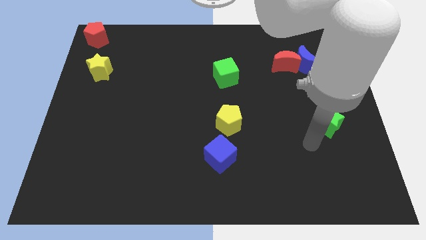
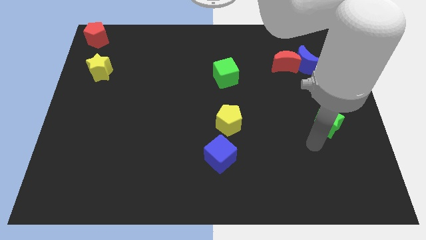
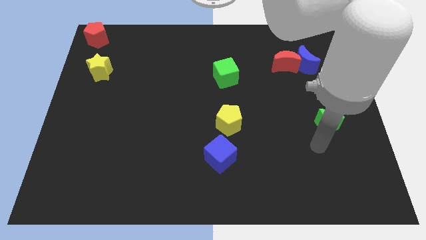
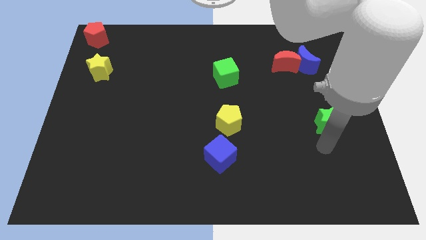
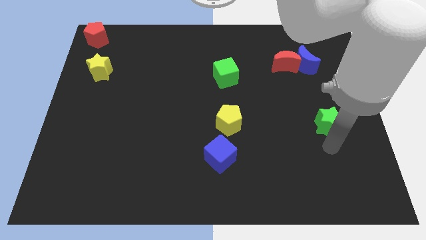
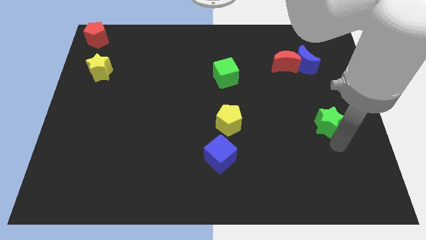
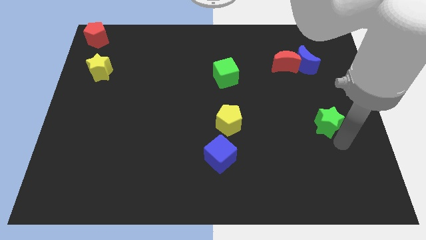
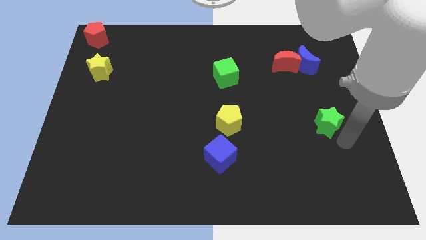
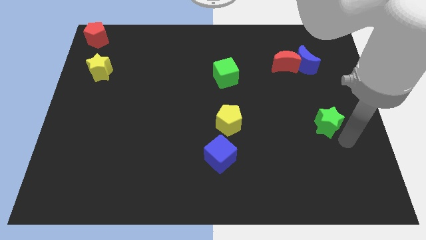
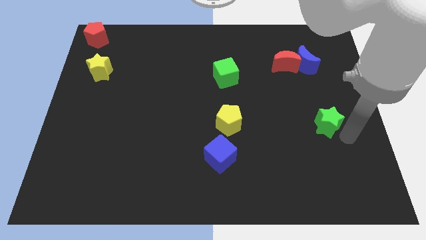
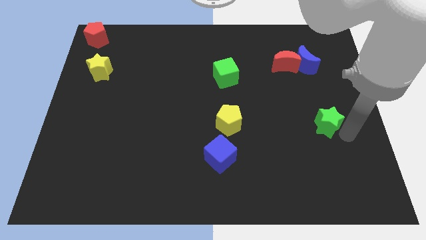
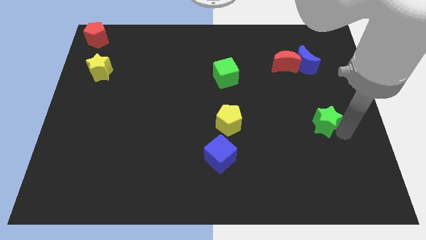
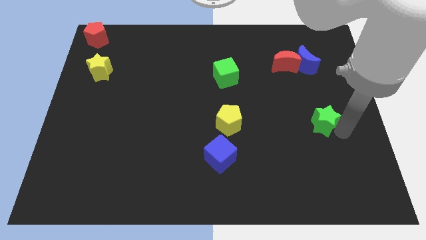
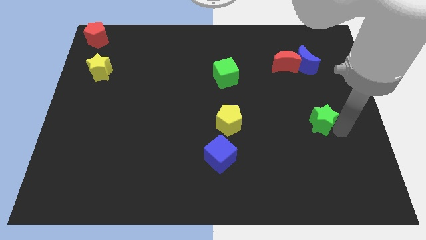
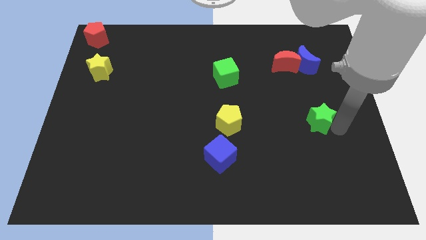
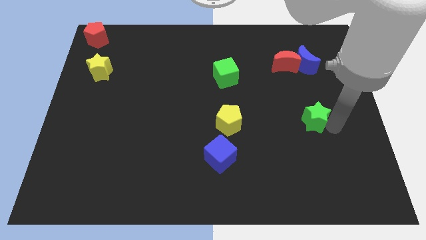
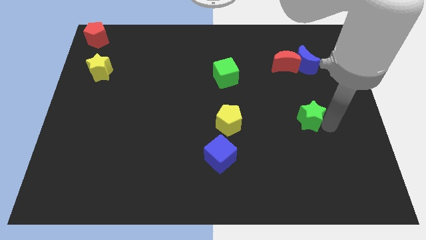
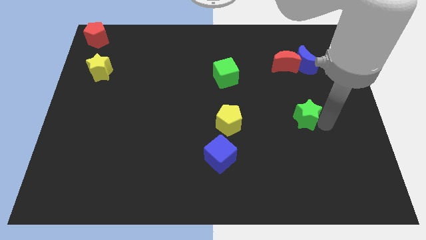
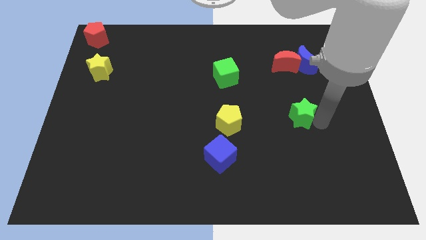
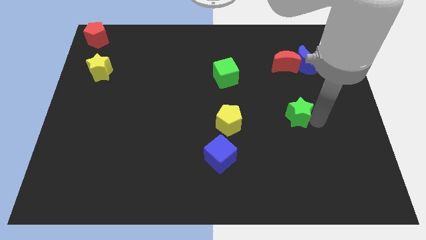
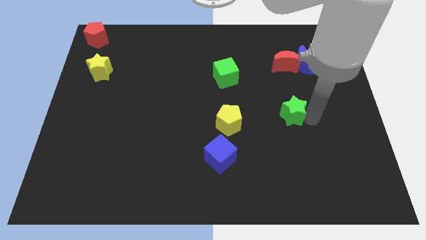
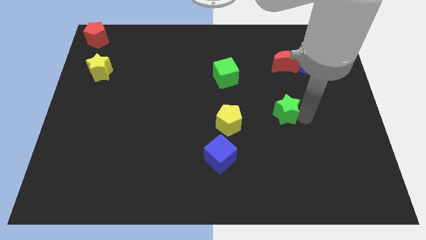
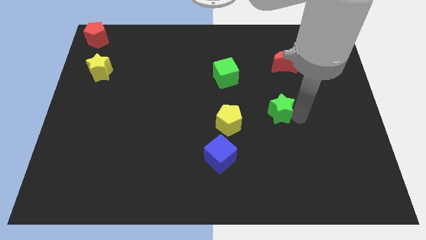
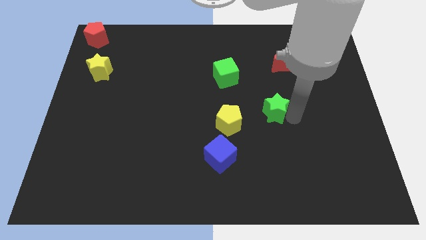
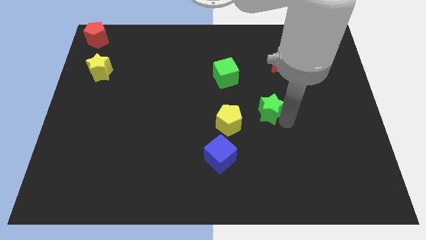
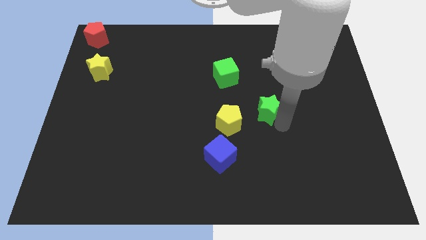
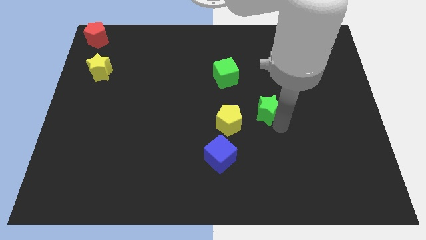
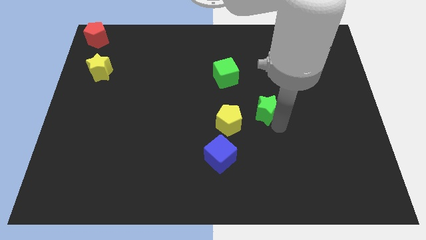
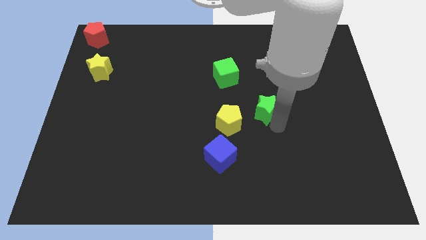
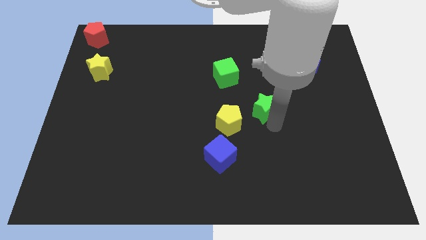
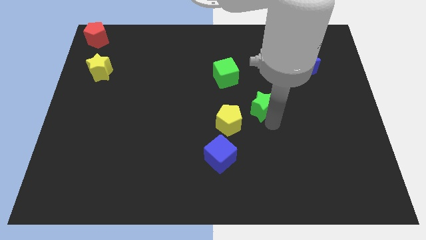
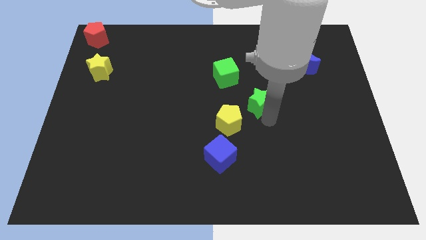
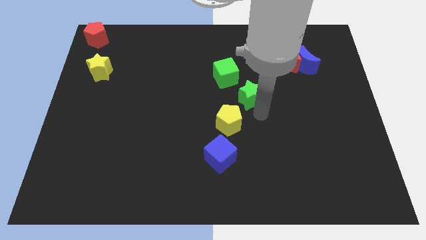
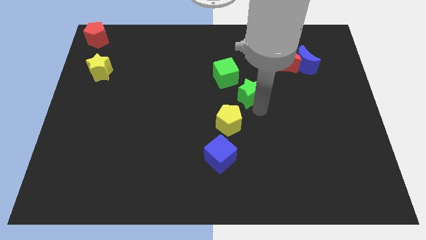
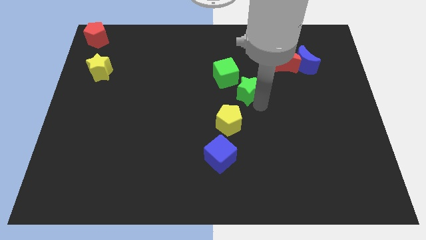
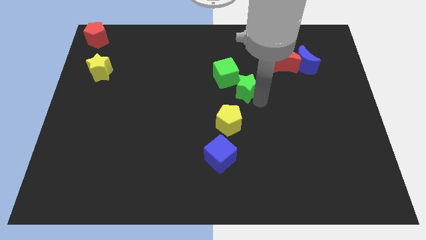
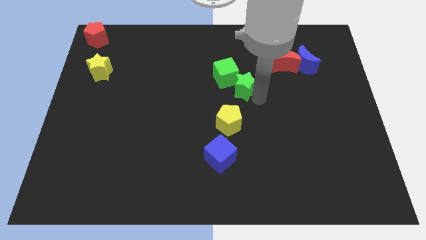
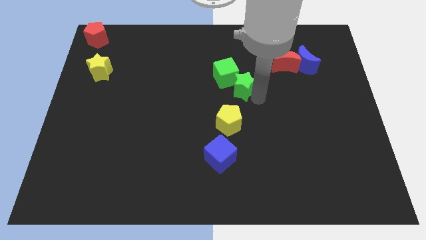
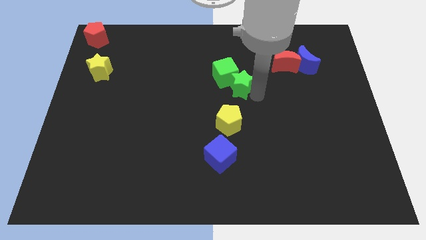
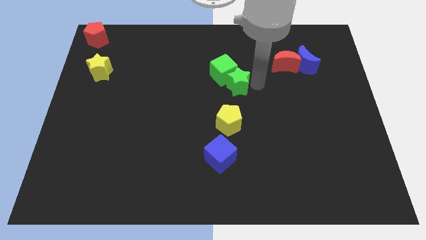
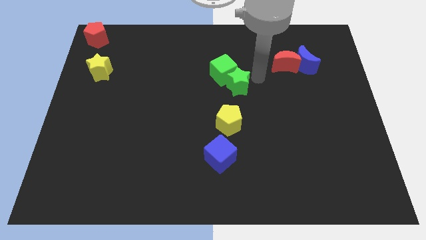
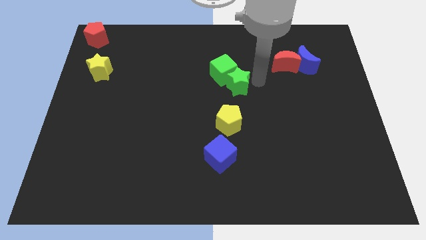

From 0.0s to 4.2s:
push the green star into the green cube

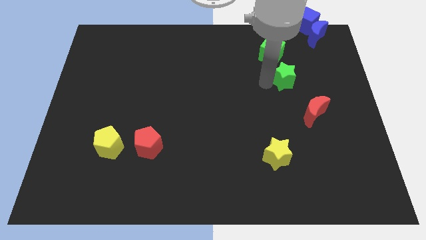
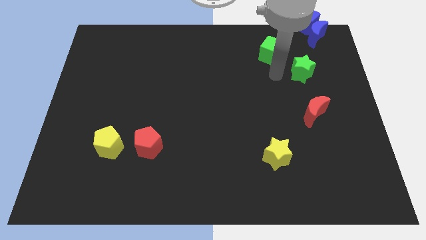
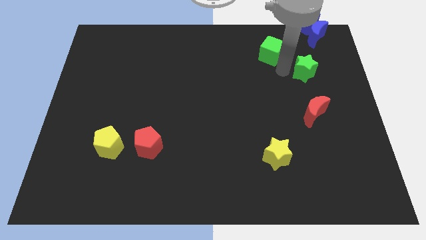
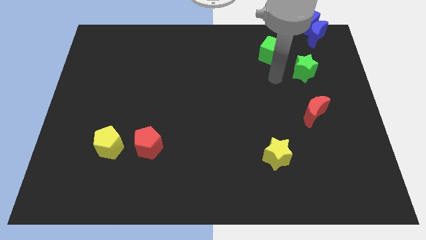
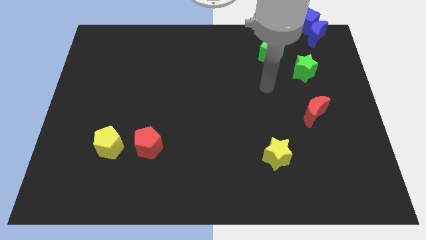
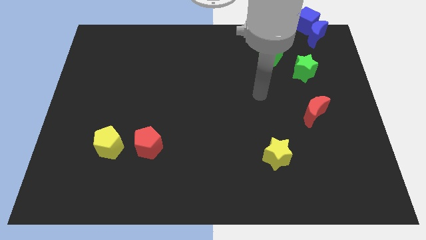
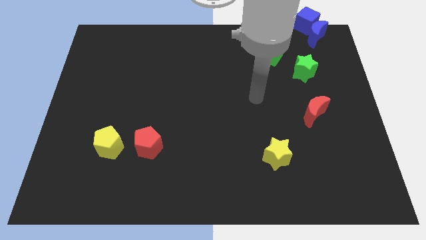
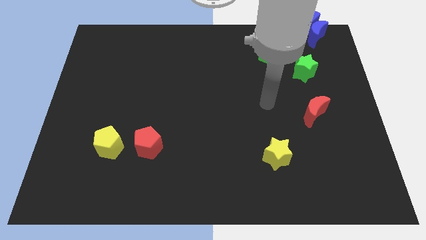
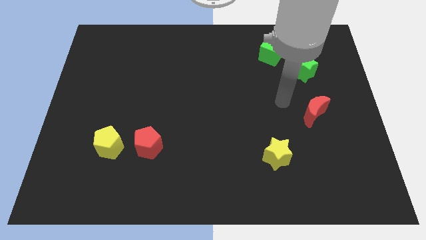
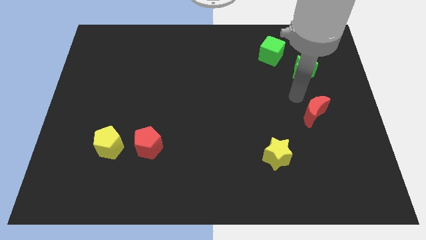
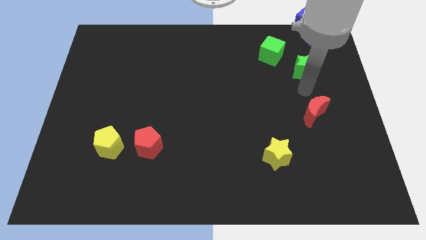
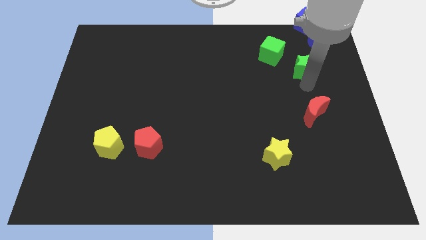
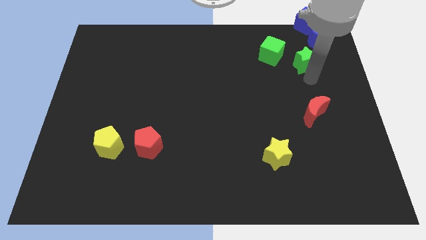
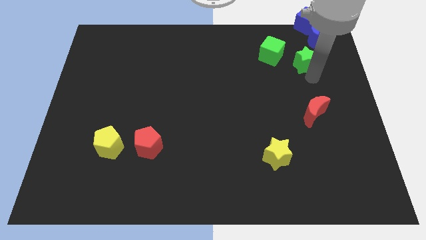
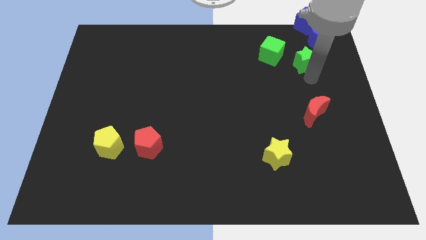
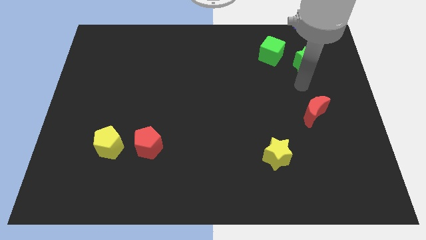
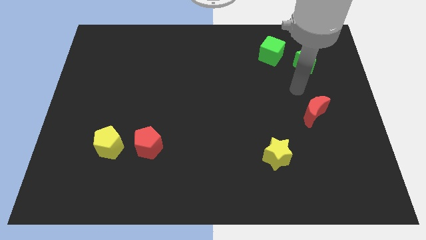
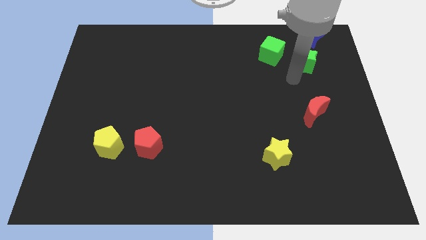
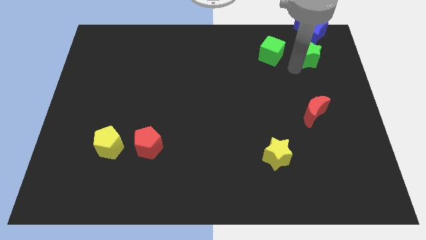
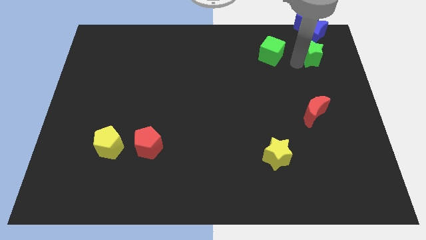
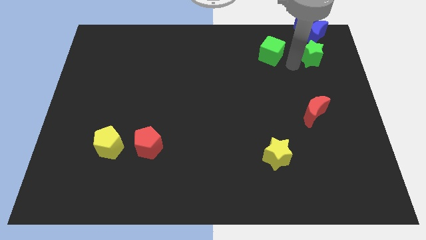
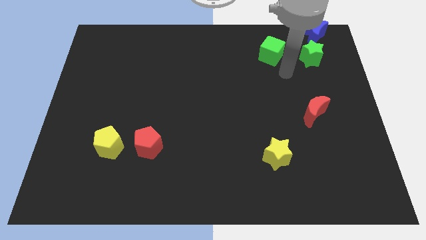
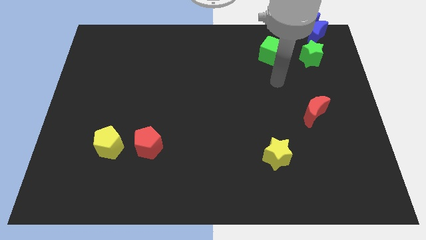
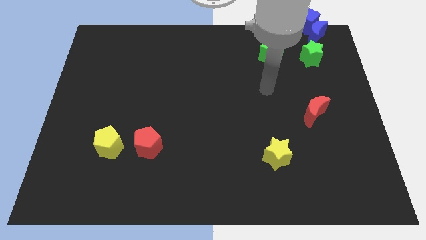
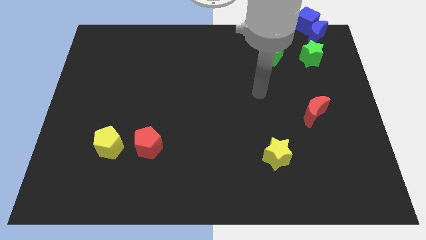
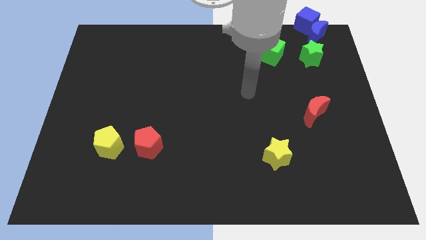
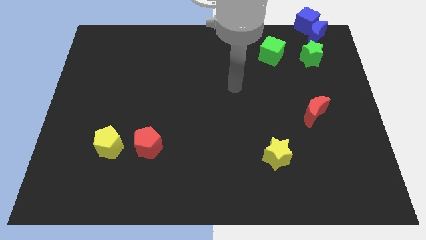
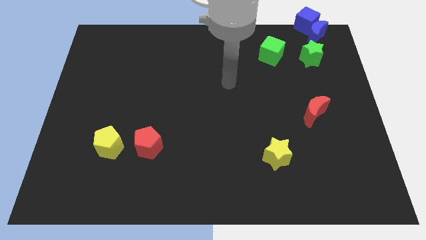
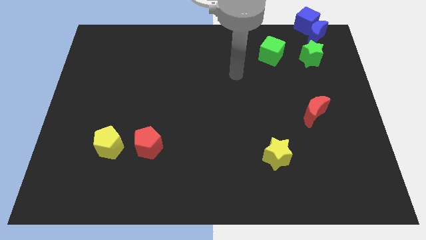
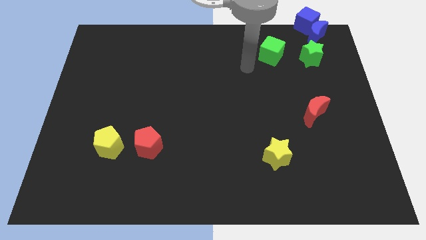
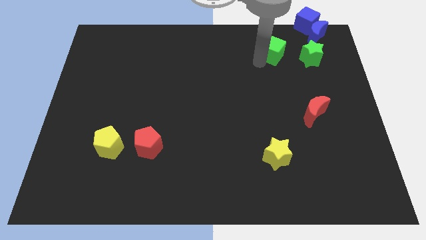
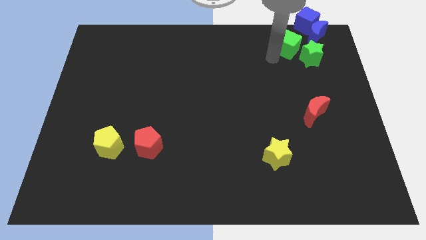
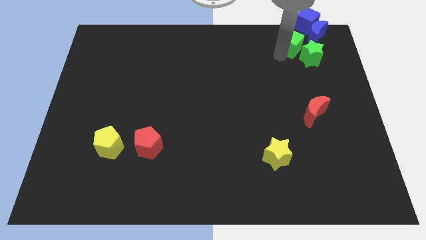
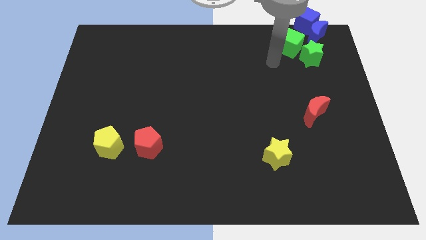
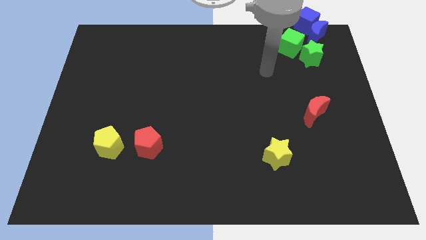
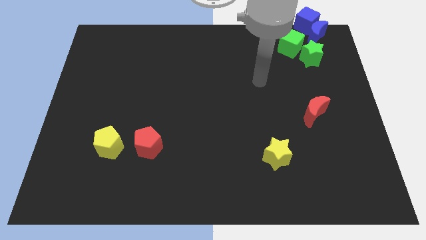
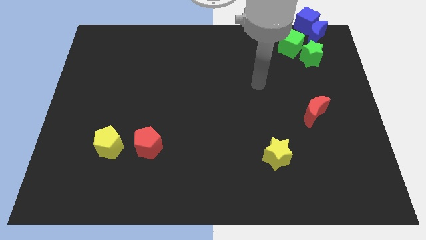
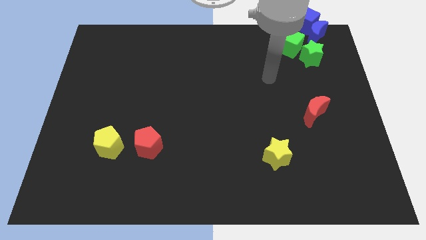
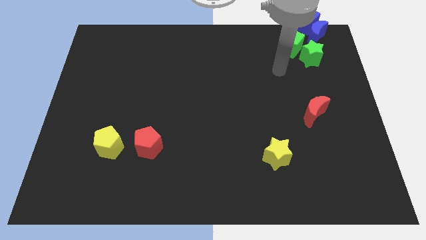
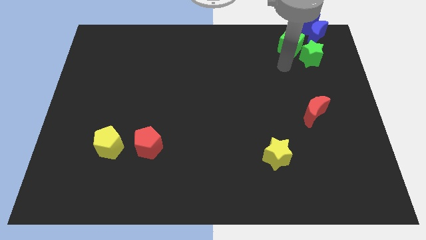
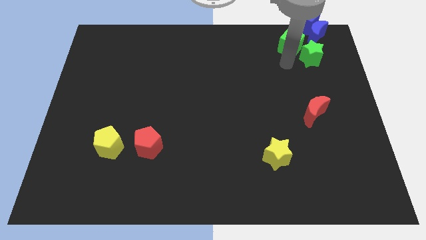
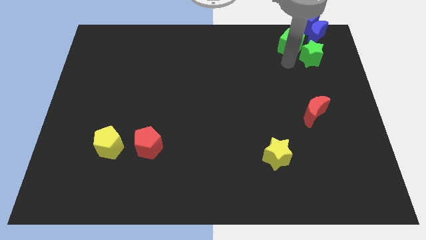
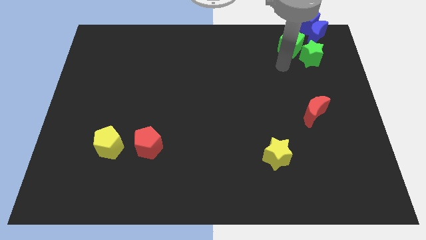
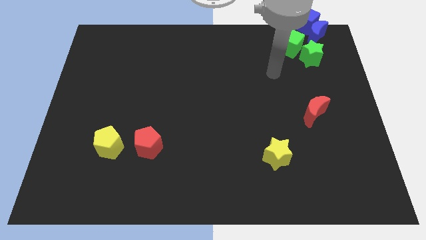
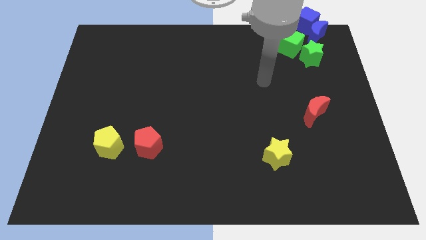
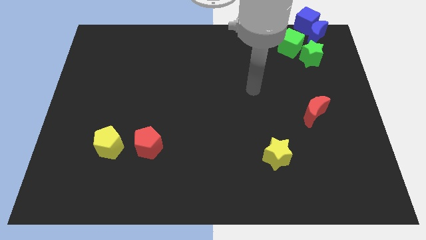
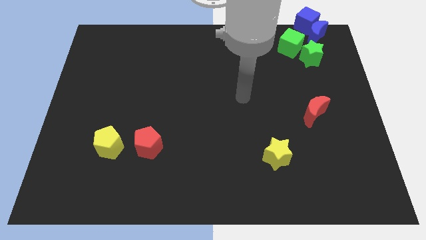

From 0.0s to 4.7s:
push the green blocks to the top right

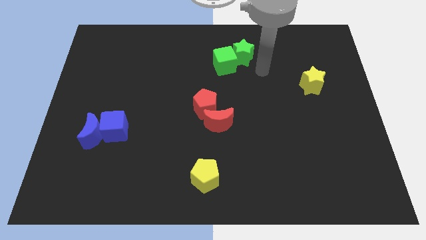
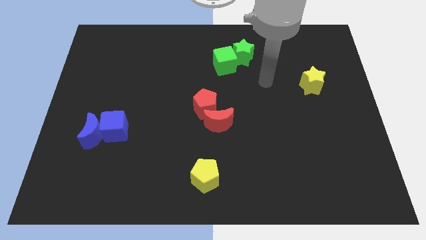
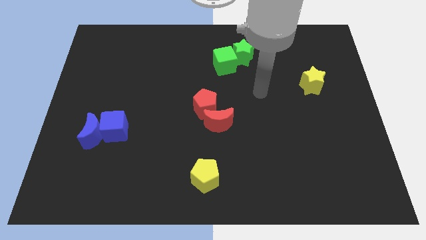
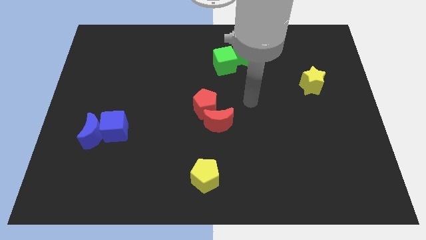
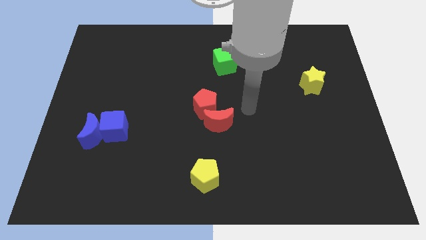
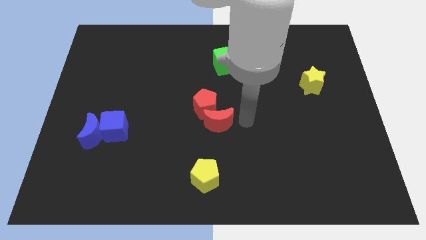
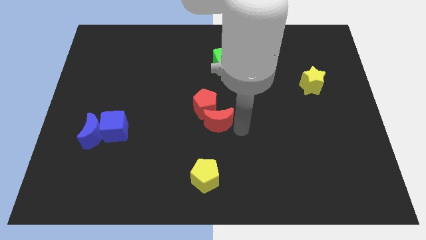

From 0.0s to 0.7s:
move the arm near to the red crescent
